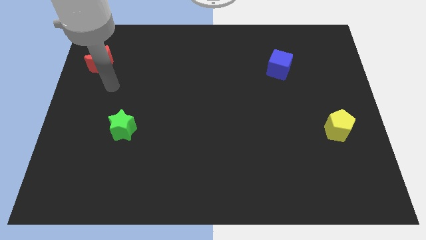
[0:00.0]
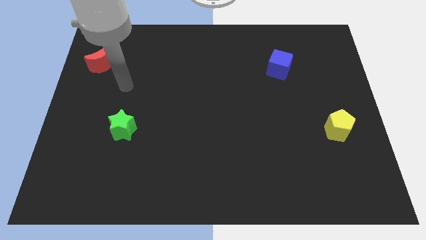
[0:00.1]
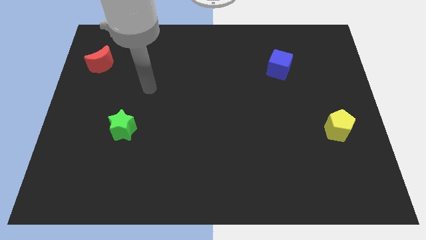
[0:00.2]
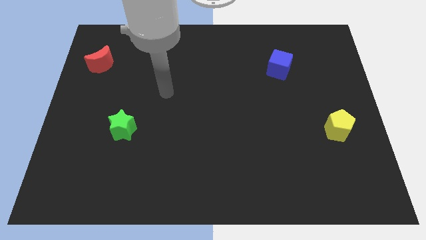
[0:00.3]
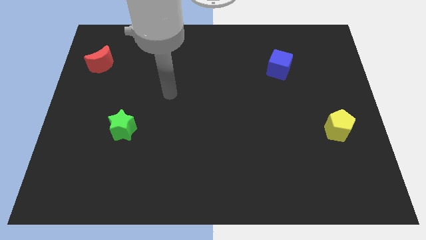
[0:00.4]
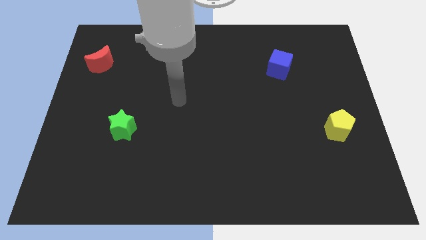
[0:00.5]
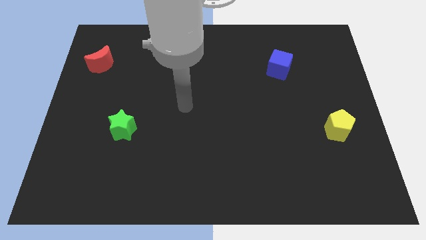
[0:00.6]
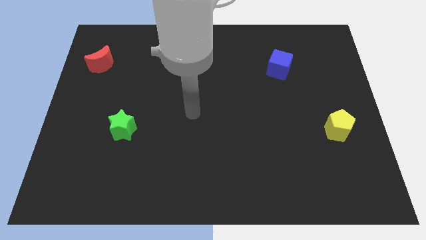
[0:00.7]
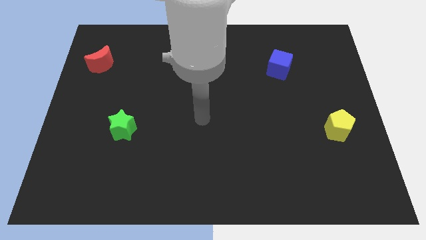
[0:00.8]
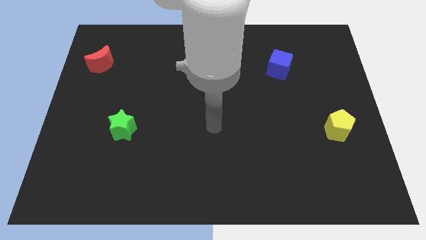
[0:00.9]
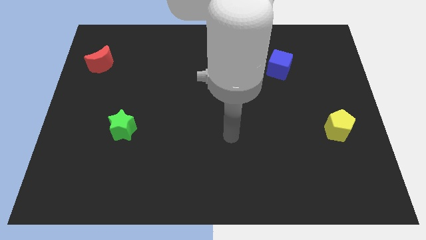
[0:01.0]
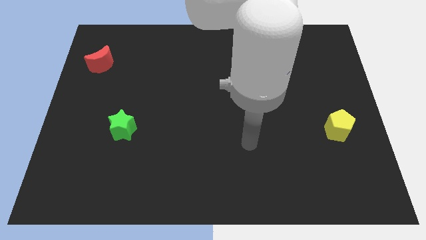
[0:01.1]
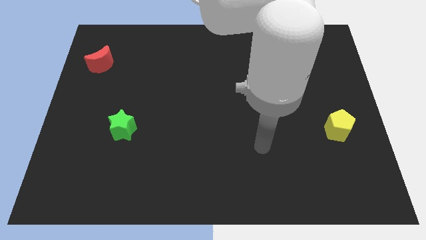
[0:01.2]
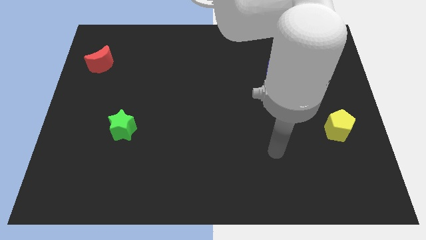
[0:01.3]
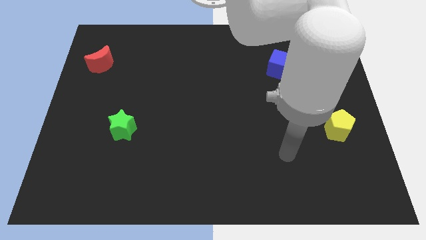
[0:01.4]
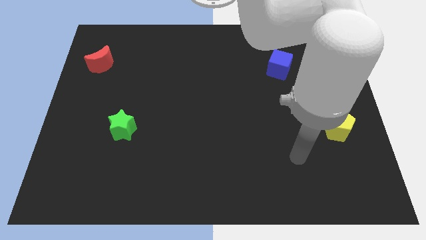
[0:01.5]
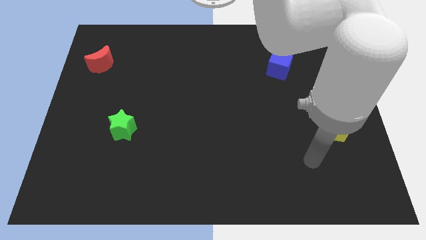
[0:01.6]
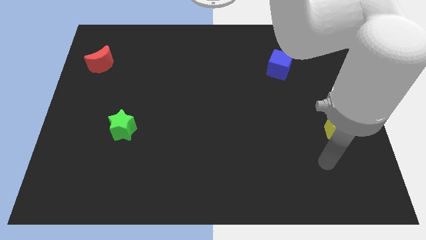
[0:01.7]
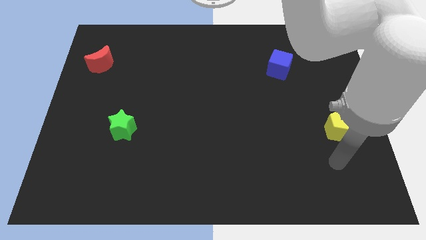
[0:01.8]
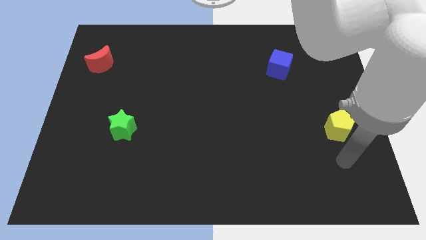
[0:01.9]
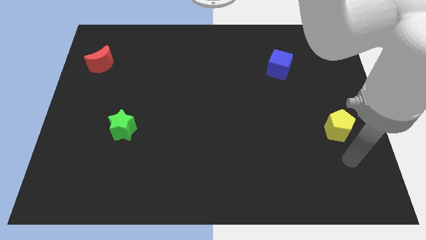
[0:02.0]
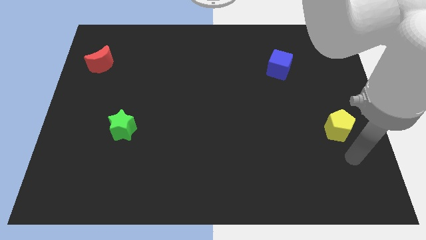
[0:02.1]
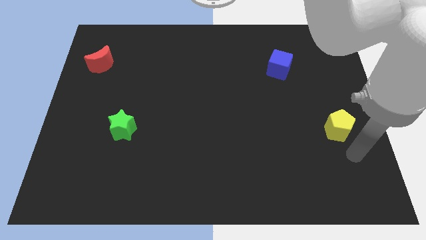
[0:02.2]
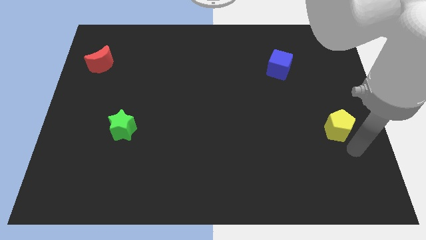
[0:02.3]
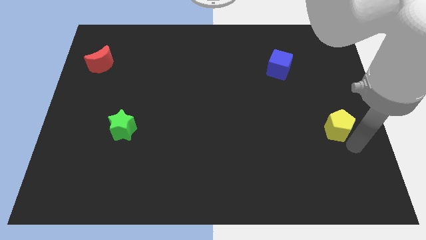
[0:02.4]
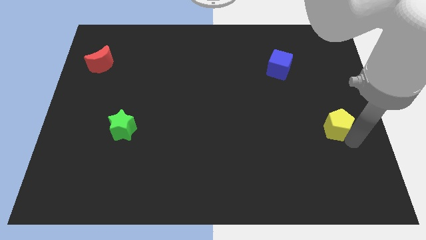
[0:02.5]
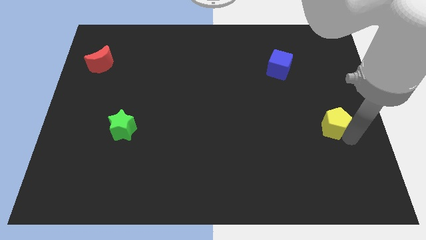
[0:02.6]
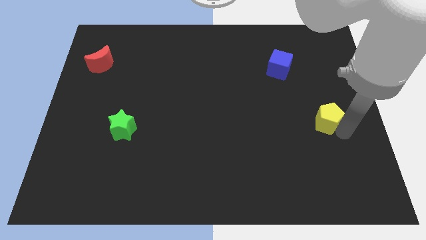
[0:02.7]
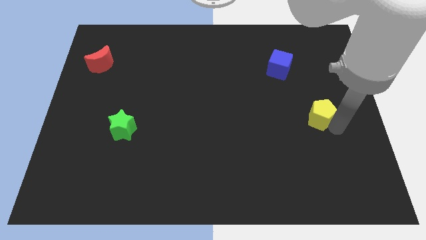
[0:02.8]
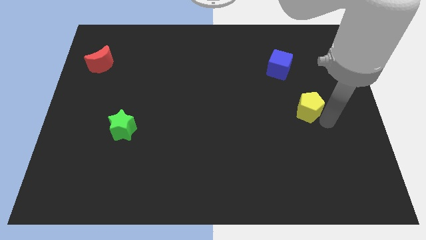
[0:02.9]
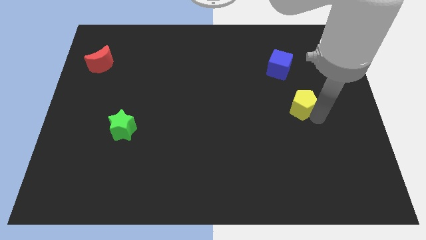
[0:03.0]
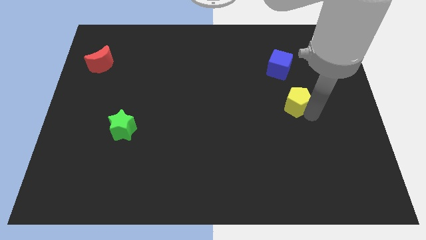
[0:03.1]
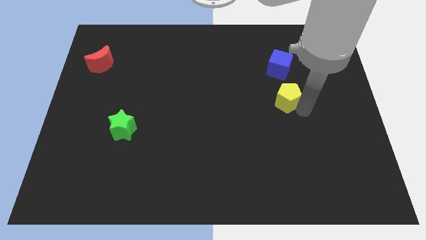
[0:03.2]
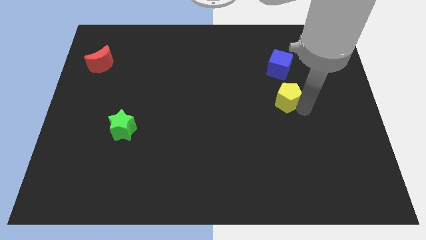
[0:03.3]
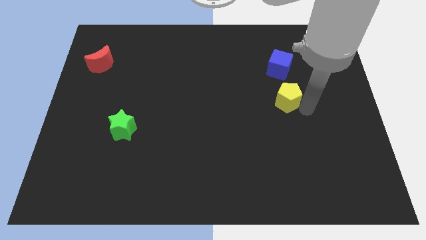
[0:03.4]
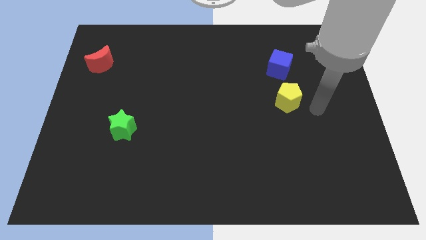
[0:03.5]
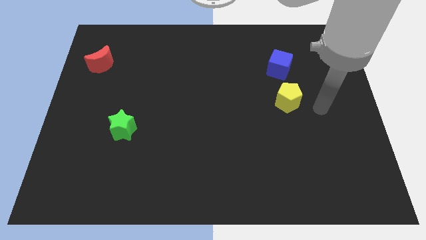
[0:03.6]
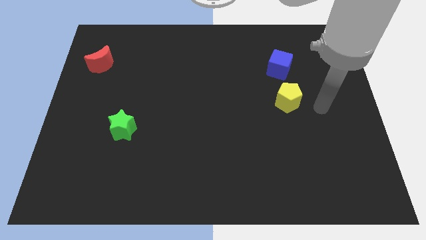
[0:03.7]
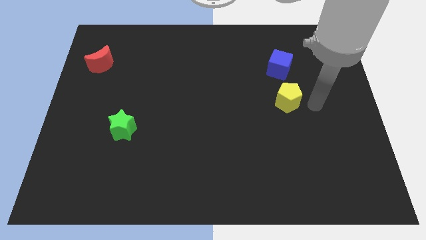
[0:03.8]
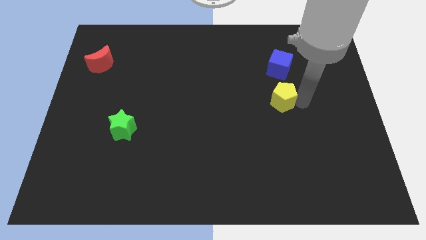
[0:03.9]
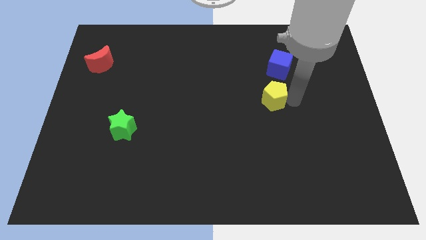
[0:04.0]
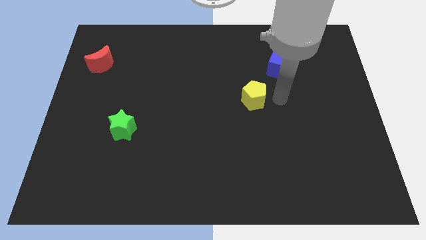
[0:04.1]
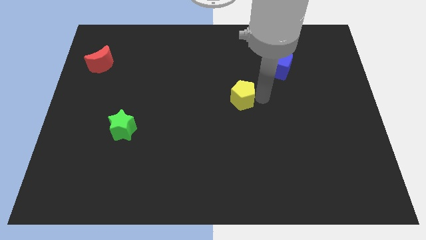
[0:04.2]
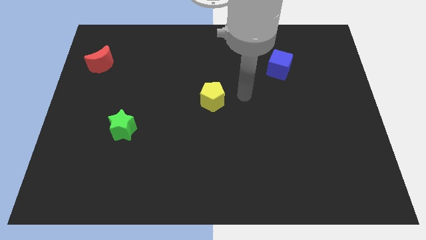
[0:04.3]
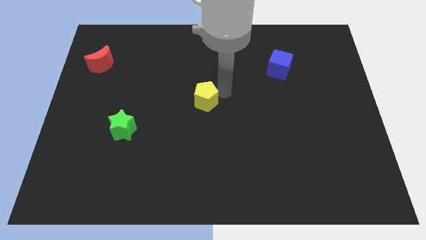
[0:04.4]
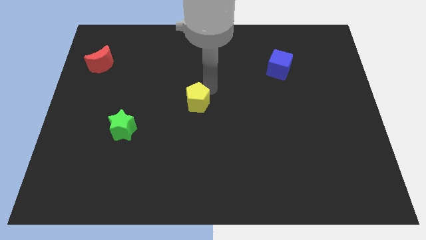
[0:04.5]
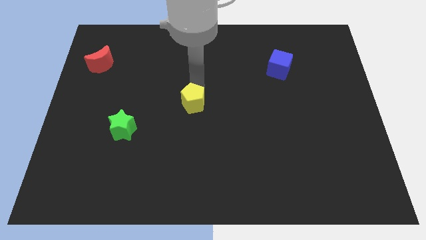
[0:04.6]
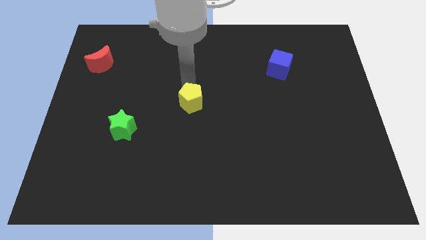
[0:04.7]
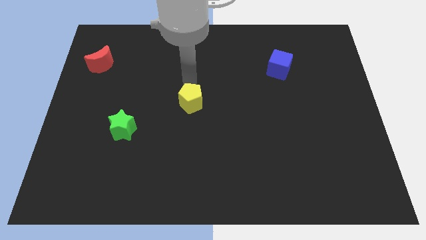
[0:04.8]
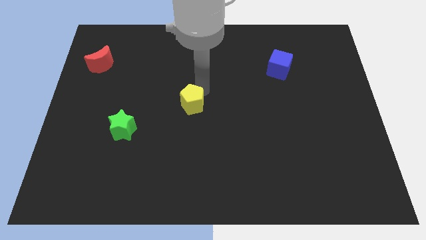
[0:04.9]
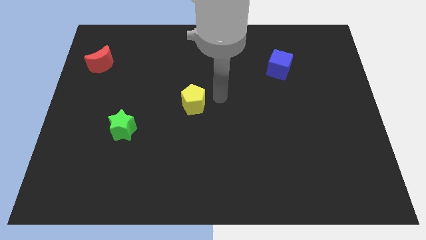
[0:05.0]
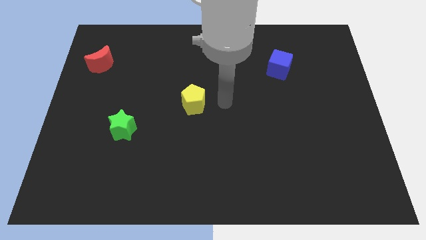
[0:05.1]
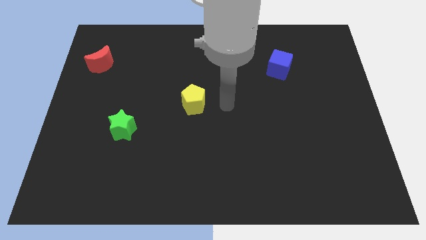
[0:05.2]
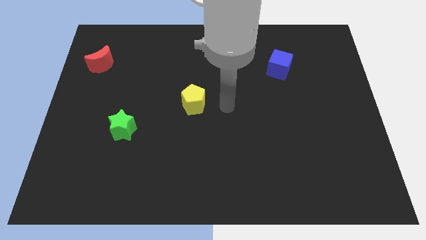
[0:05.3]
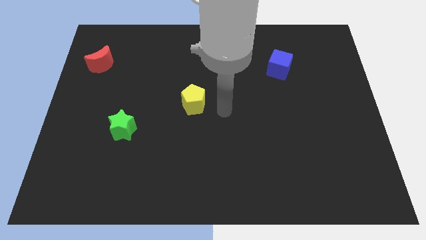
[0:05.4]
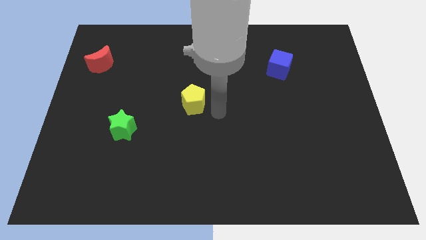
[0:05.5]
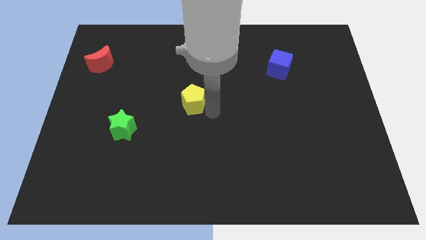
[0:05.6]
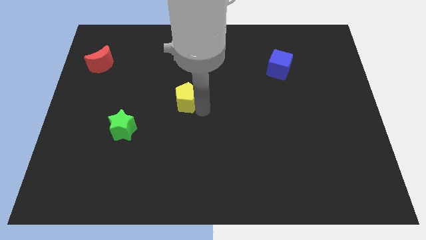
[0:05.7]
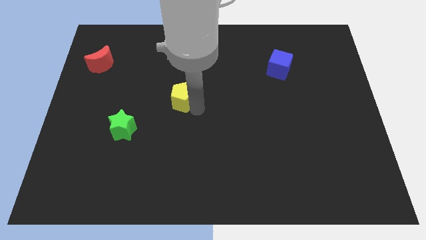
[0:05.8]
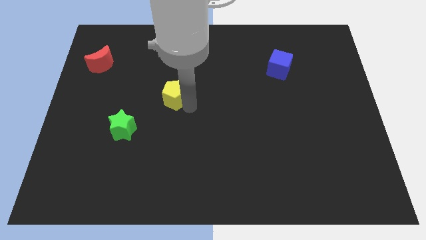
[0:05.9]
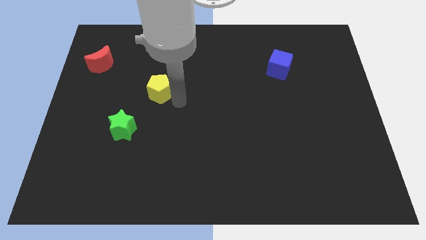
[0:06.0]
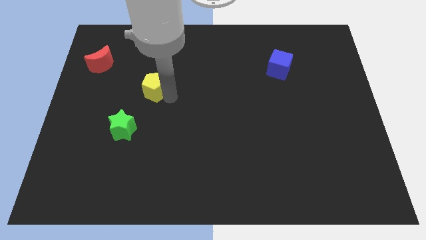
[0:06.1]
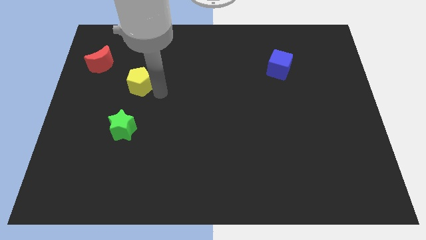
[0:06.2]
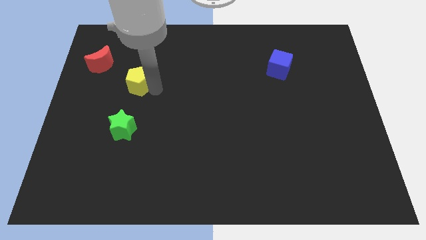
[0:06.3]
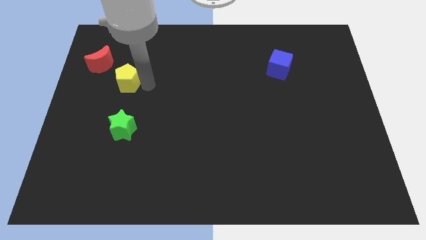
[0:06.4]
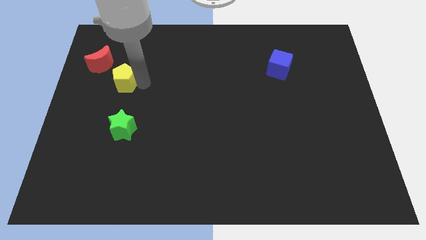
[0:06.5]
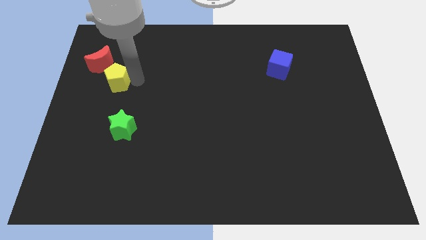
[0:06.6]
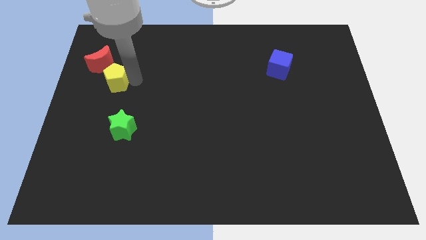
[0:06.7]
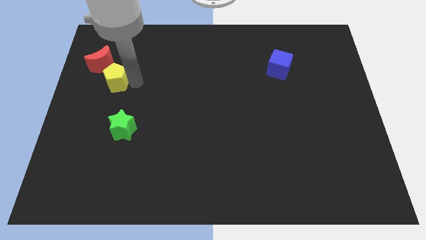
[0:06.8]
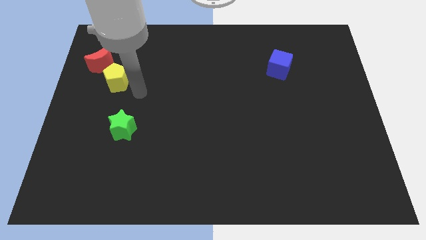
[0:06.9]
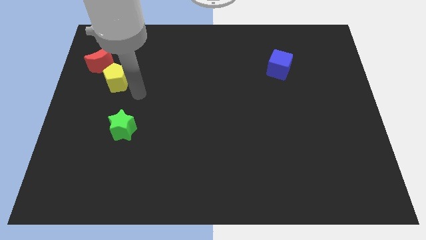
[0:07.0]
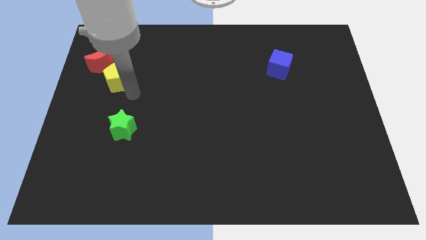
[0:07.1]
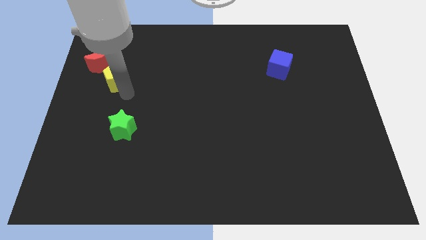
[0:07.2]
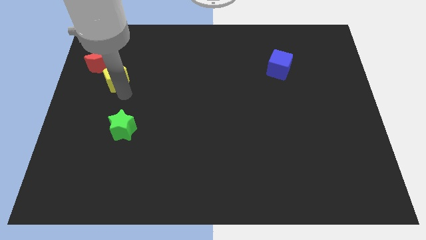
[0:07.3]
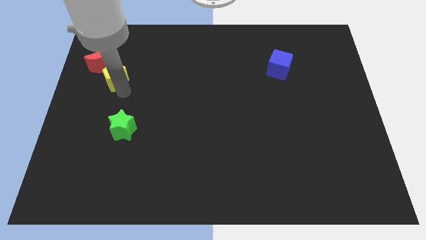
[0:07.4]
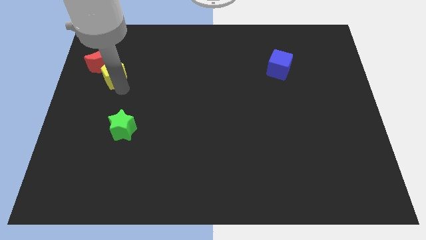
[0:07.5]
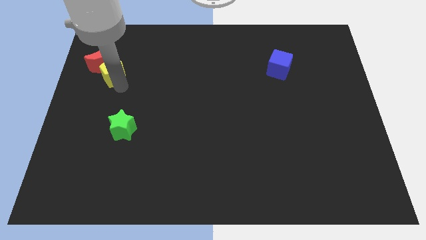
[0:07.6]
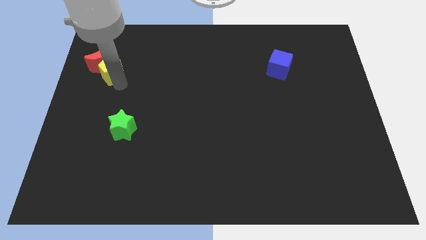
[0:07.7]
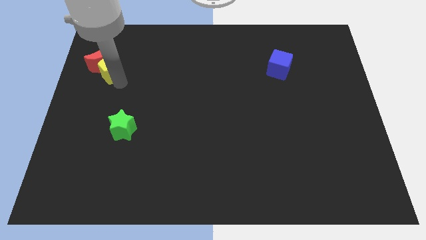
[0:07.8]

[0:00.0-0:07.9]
put the pentagon towards the red moon

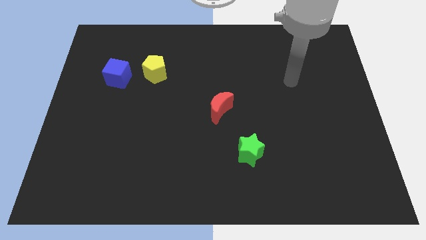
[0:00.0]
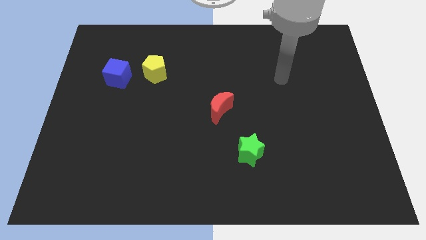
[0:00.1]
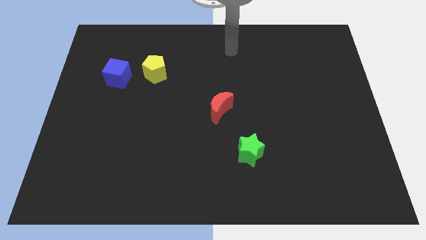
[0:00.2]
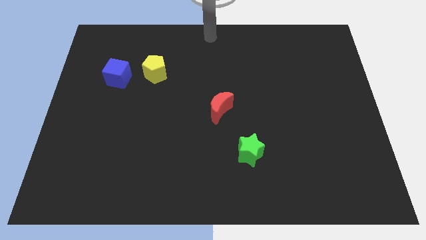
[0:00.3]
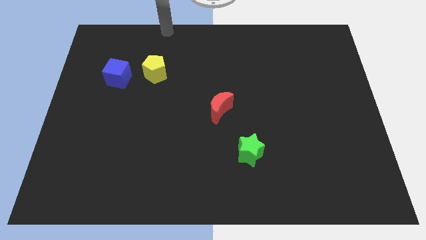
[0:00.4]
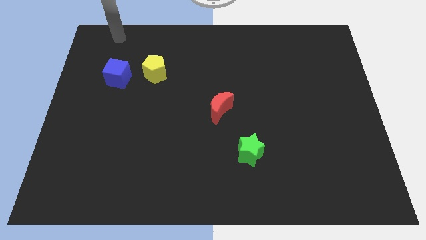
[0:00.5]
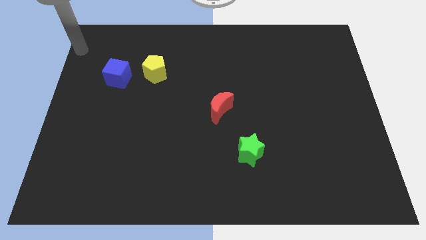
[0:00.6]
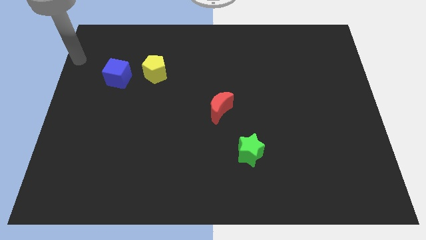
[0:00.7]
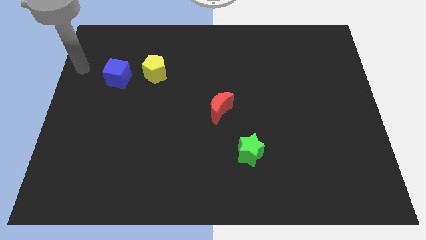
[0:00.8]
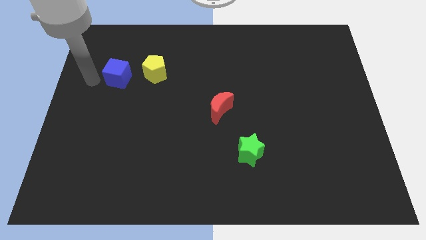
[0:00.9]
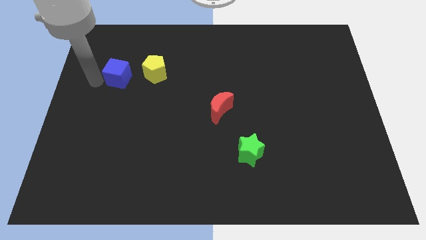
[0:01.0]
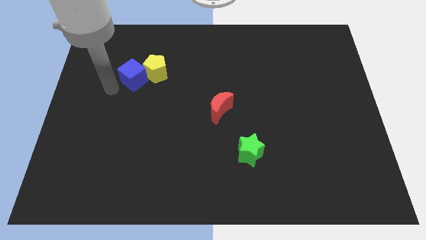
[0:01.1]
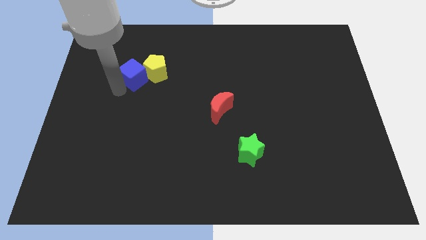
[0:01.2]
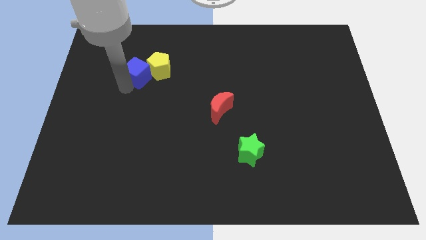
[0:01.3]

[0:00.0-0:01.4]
move the blue cube towards the yellow pentagon
